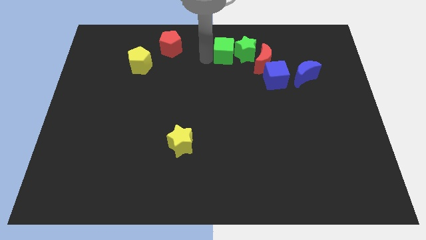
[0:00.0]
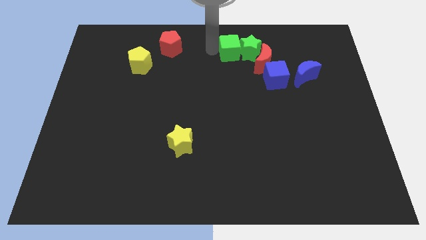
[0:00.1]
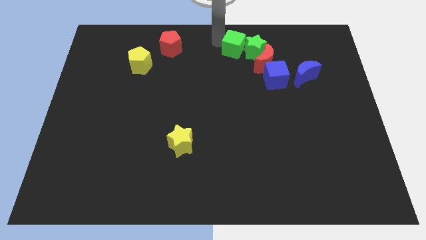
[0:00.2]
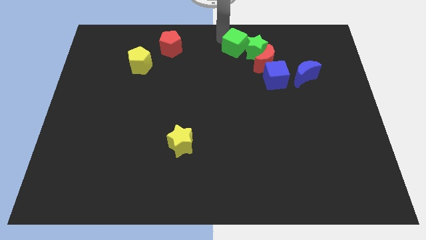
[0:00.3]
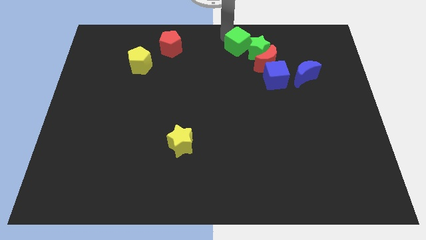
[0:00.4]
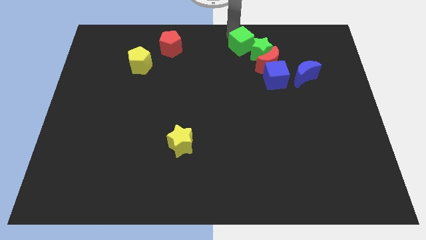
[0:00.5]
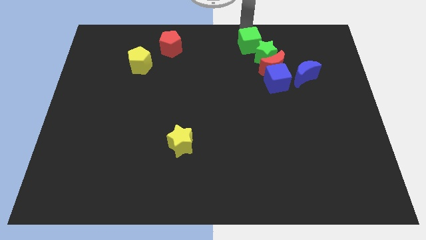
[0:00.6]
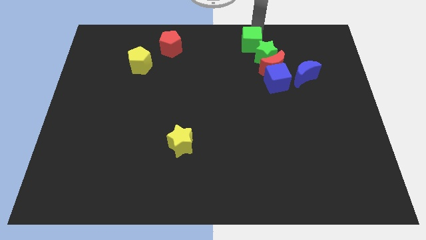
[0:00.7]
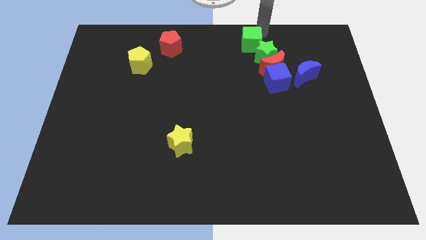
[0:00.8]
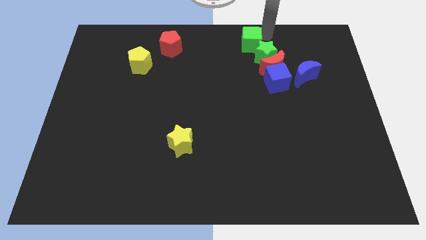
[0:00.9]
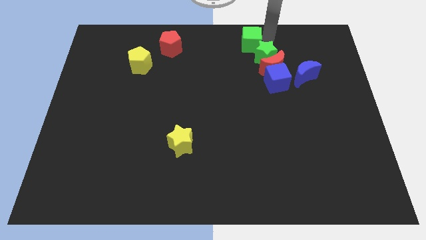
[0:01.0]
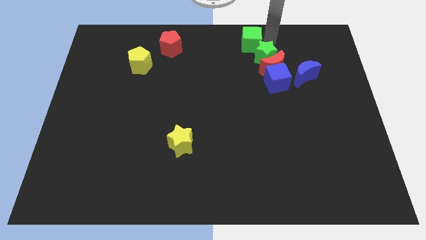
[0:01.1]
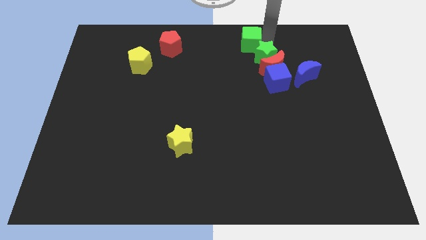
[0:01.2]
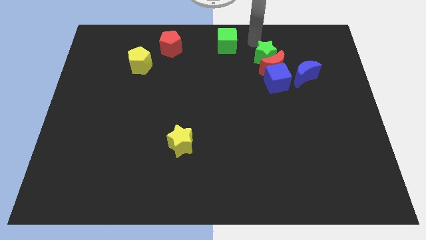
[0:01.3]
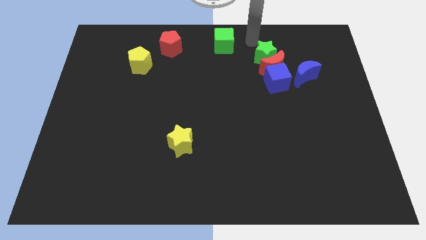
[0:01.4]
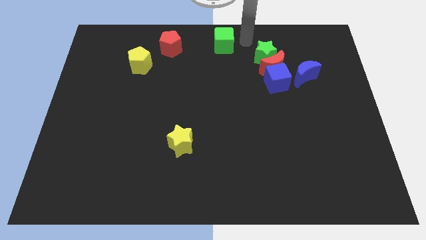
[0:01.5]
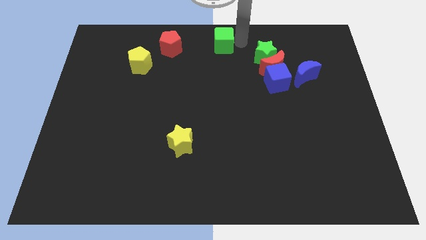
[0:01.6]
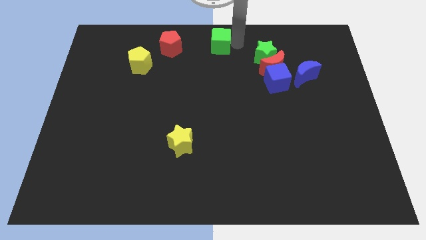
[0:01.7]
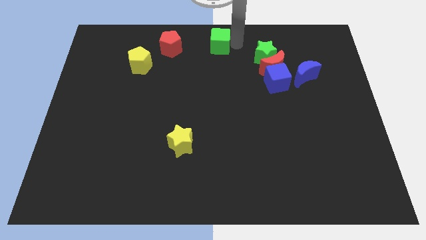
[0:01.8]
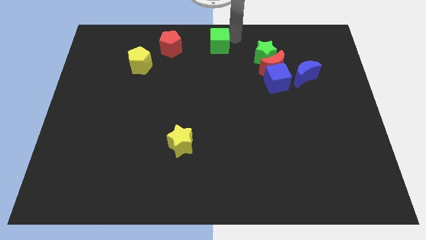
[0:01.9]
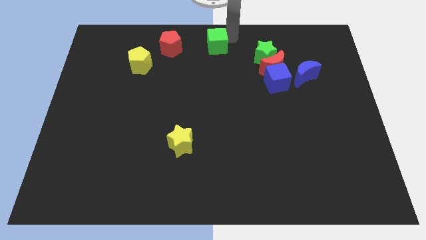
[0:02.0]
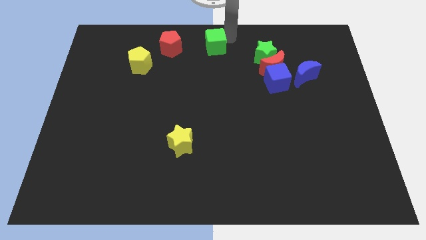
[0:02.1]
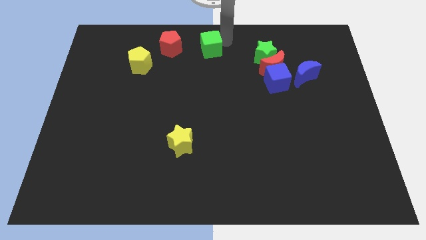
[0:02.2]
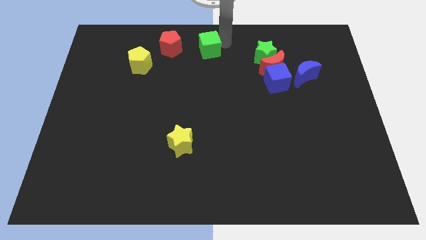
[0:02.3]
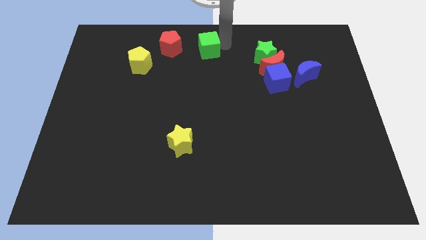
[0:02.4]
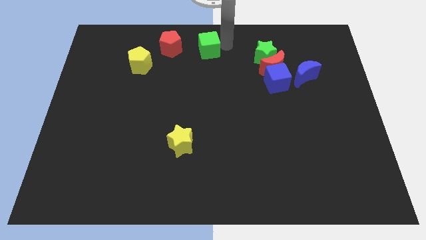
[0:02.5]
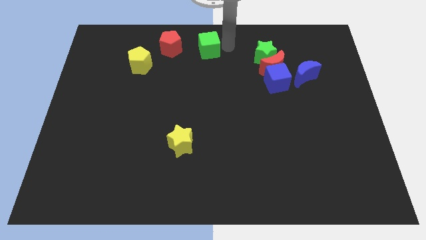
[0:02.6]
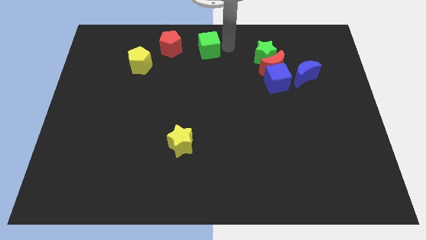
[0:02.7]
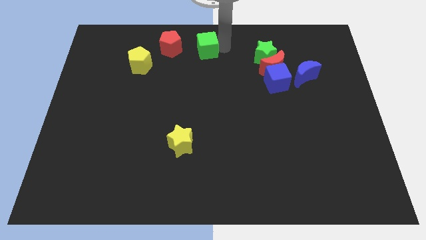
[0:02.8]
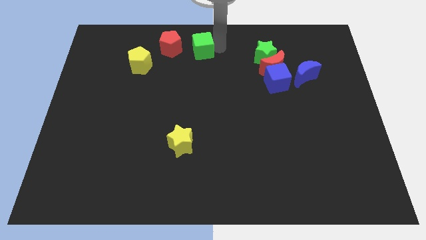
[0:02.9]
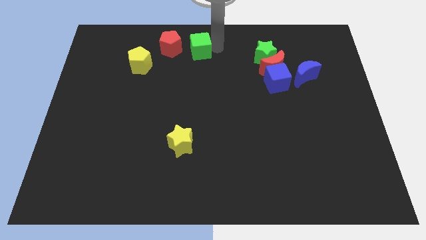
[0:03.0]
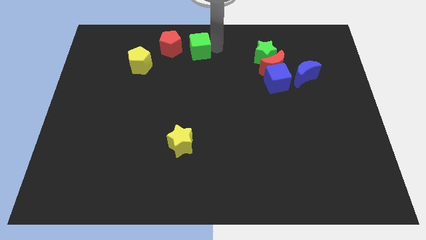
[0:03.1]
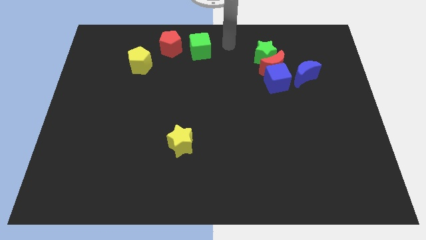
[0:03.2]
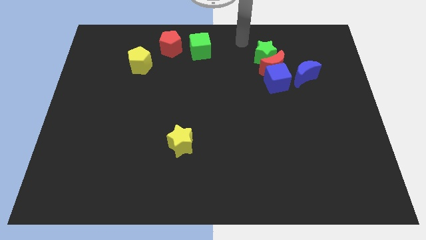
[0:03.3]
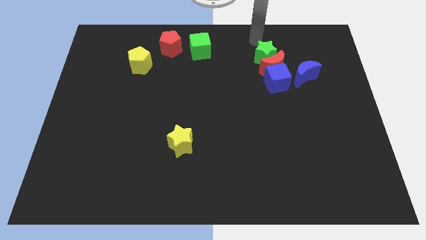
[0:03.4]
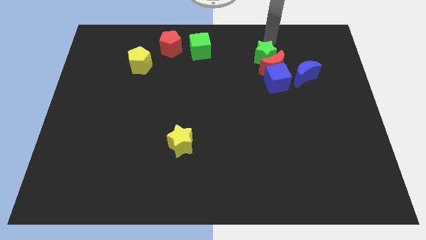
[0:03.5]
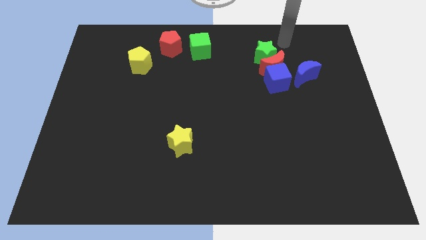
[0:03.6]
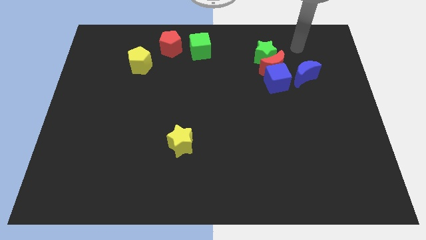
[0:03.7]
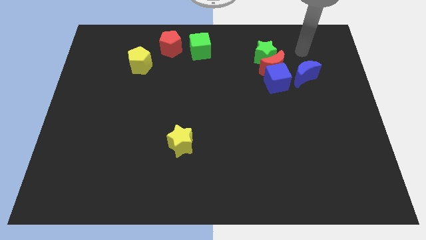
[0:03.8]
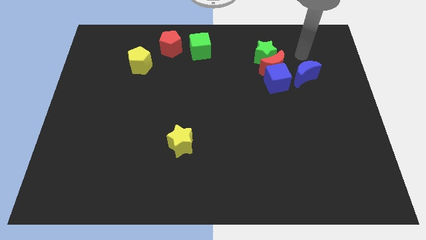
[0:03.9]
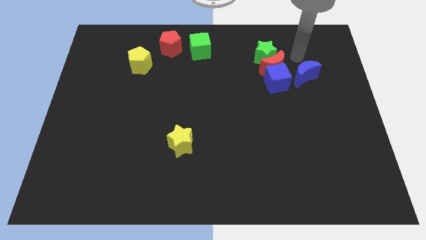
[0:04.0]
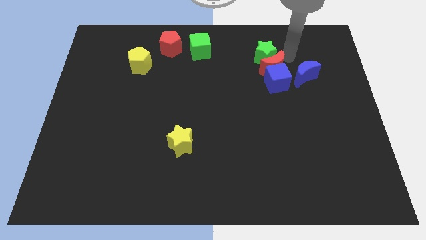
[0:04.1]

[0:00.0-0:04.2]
move the green cube away from the green star

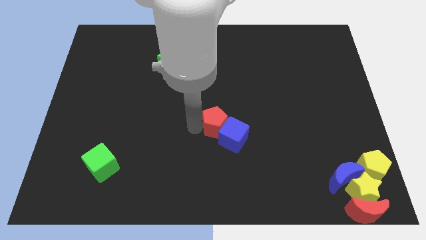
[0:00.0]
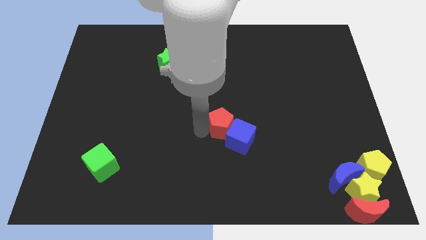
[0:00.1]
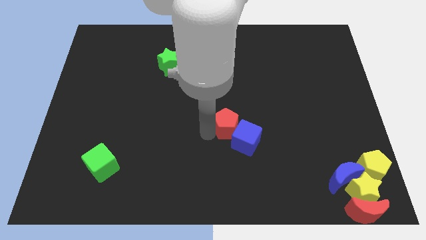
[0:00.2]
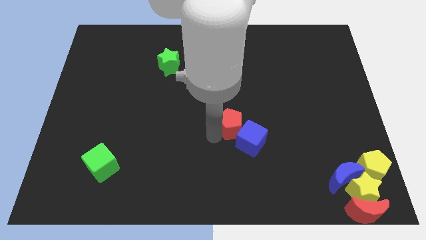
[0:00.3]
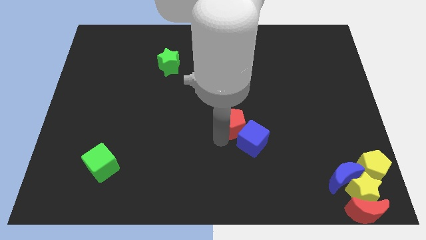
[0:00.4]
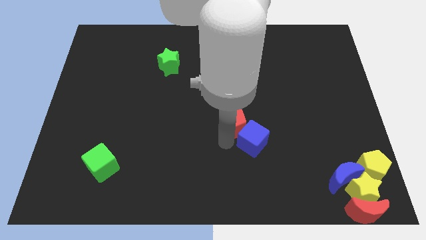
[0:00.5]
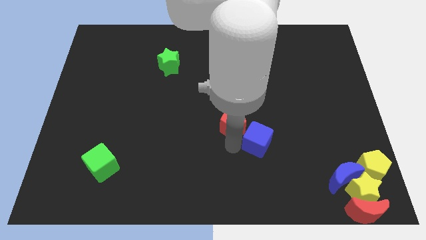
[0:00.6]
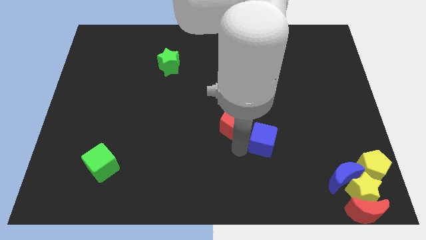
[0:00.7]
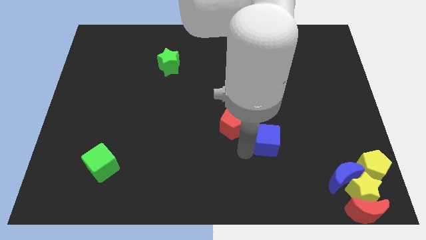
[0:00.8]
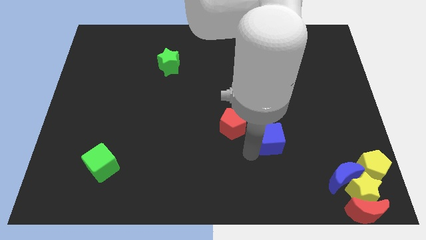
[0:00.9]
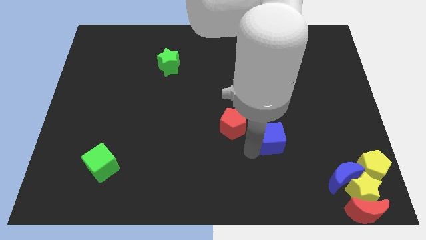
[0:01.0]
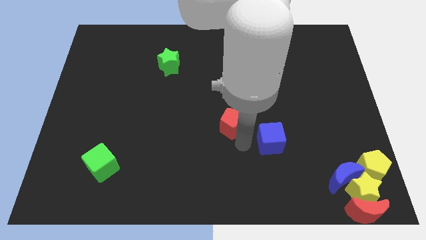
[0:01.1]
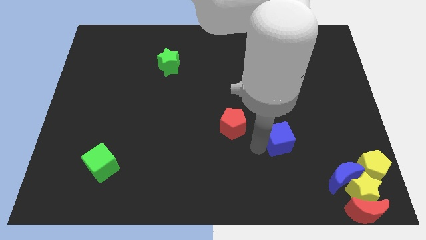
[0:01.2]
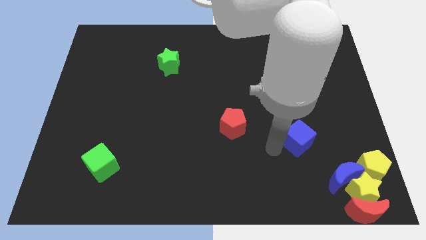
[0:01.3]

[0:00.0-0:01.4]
push the red pentagon away from the blue cube

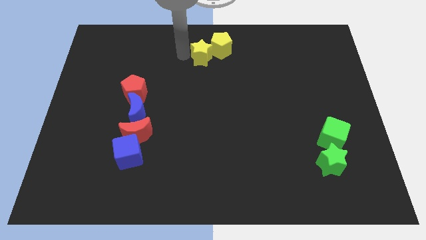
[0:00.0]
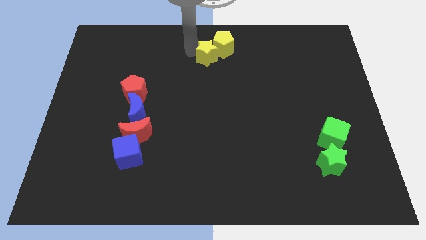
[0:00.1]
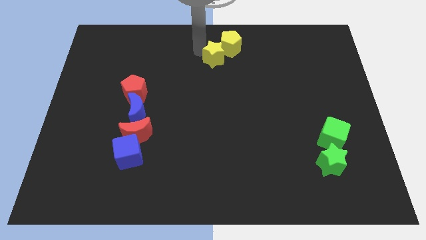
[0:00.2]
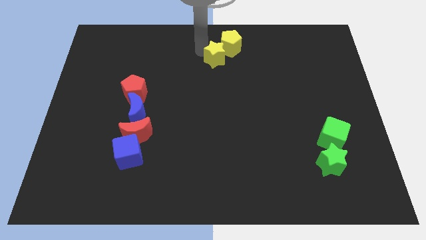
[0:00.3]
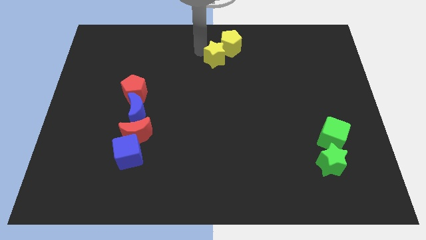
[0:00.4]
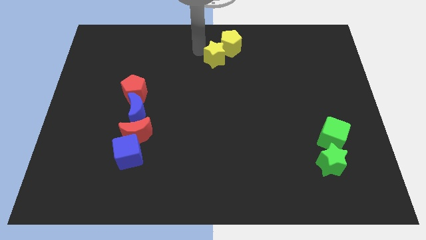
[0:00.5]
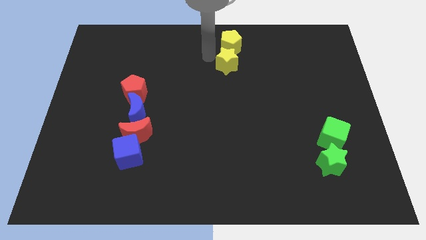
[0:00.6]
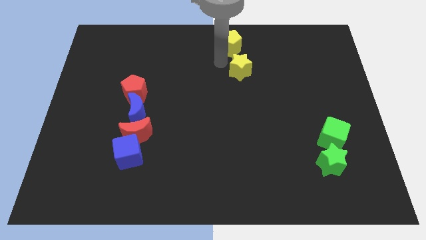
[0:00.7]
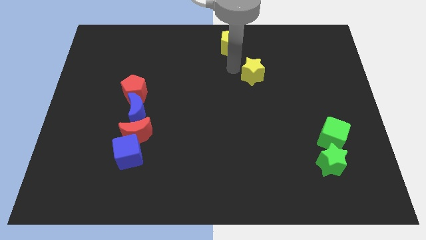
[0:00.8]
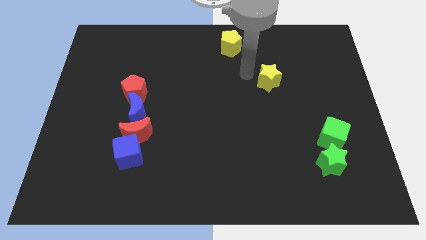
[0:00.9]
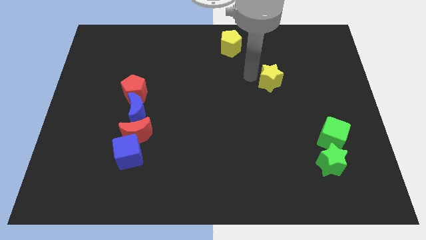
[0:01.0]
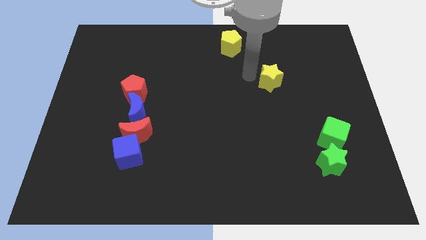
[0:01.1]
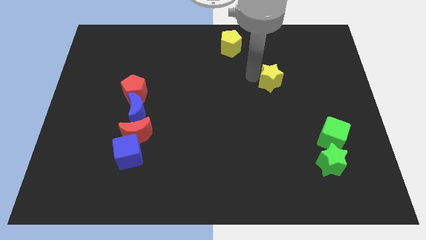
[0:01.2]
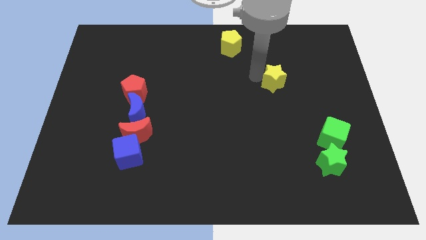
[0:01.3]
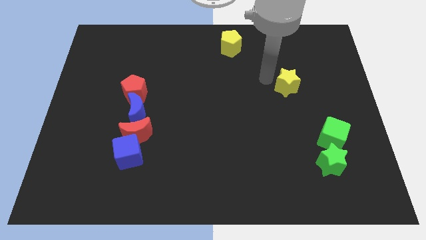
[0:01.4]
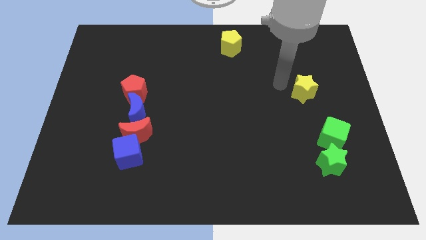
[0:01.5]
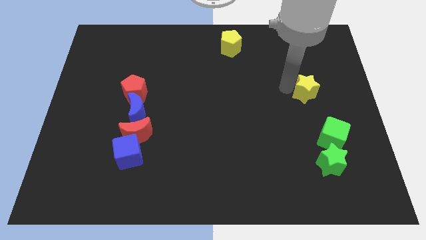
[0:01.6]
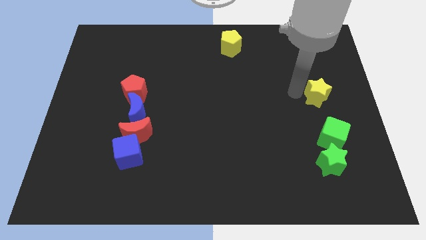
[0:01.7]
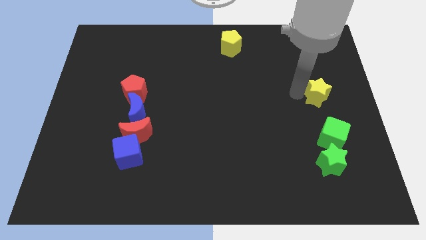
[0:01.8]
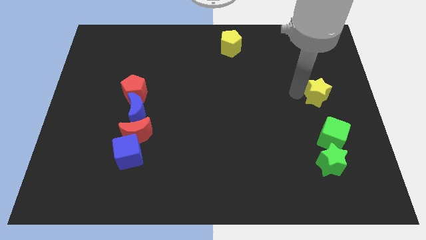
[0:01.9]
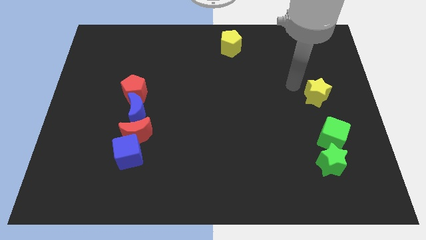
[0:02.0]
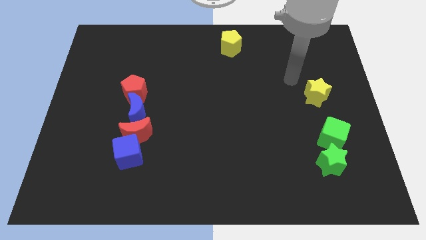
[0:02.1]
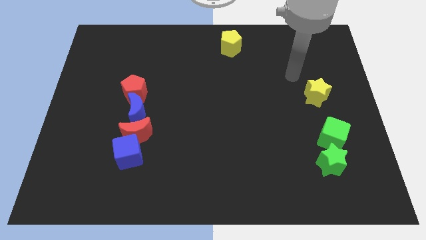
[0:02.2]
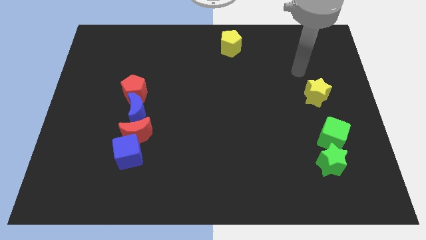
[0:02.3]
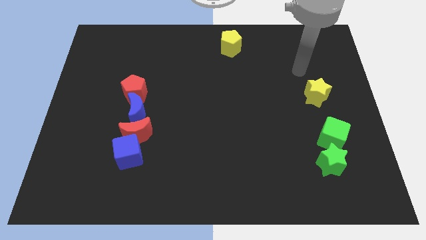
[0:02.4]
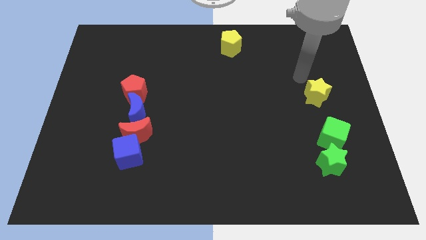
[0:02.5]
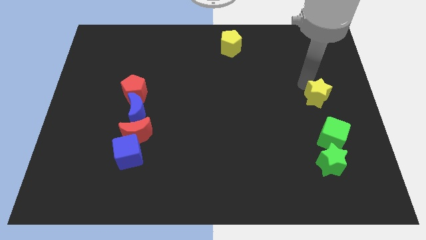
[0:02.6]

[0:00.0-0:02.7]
separate the yellow star from yellow pentagon

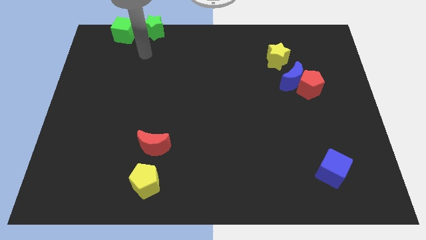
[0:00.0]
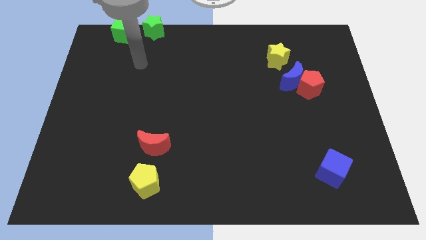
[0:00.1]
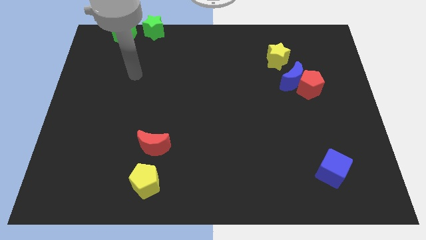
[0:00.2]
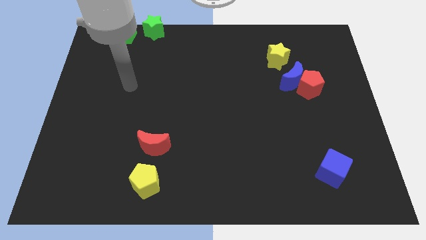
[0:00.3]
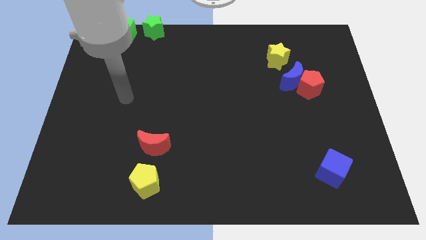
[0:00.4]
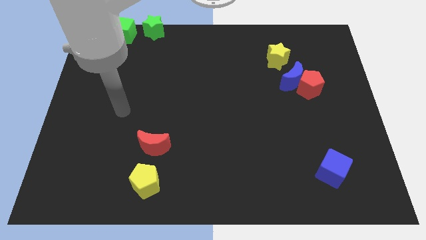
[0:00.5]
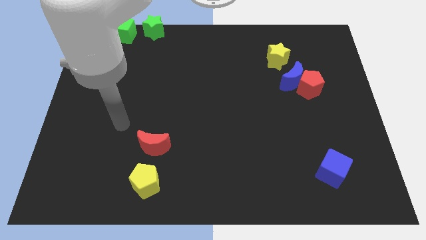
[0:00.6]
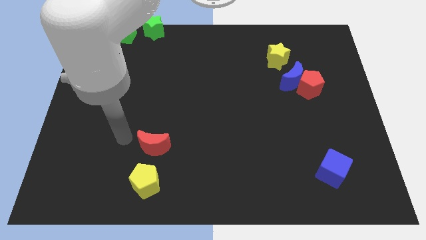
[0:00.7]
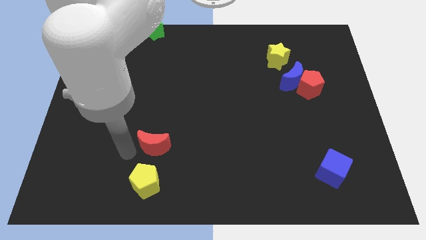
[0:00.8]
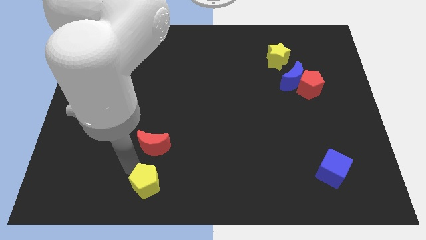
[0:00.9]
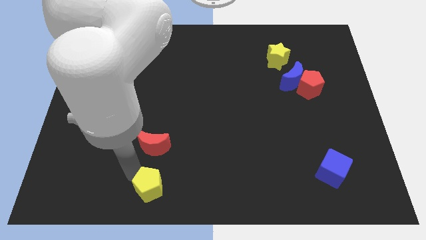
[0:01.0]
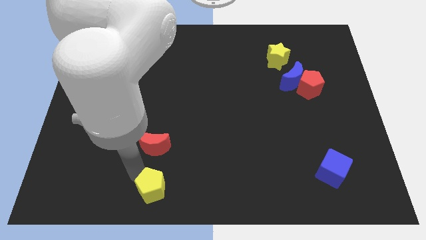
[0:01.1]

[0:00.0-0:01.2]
tap the yellow pentagon
